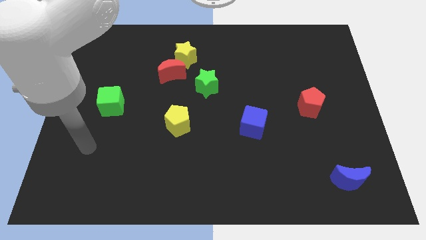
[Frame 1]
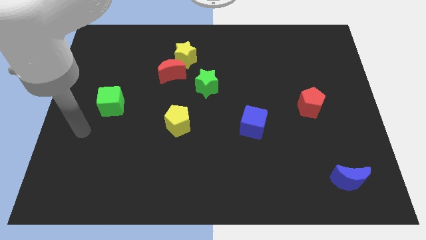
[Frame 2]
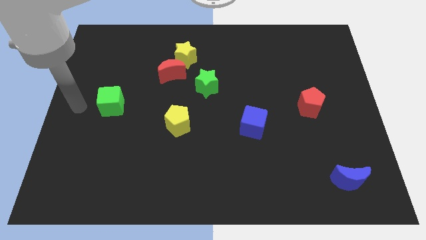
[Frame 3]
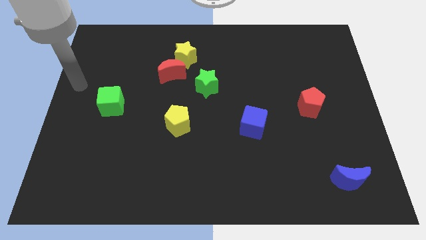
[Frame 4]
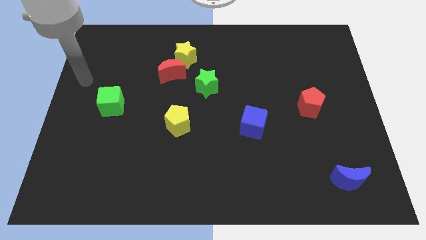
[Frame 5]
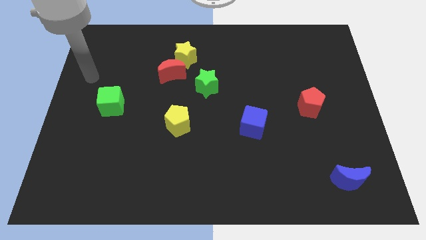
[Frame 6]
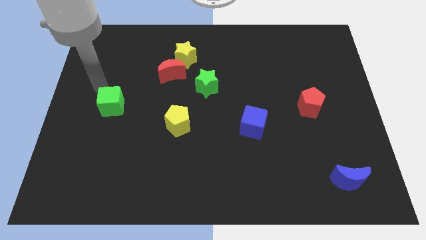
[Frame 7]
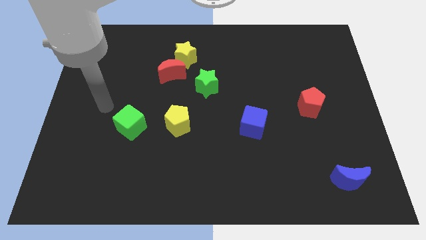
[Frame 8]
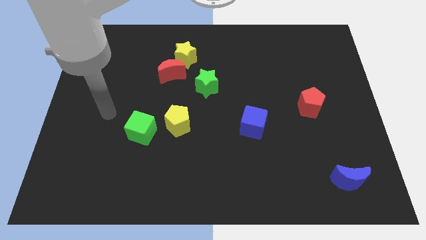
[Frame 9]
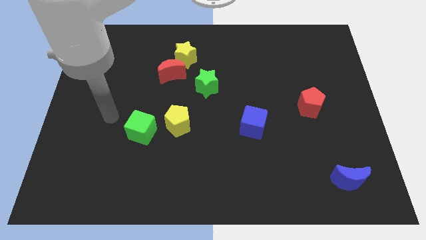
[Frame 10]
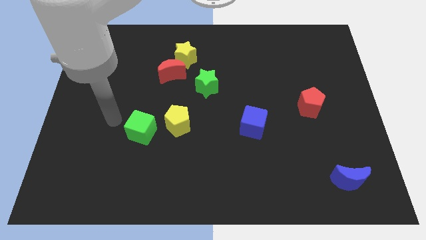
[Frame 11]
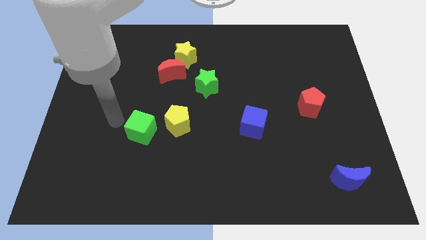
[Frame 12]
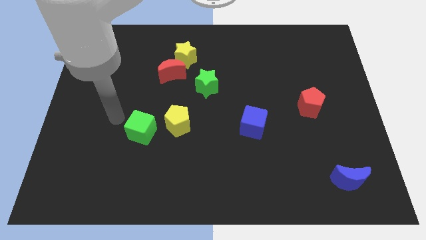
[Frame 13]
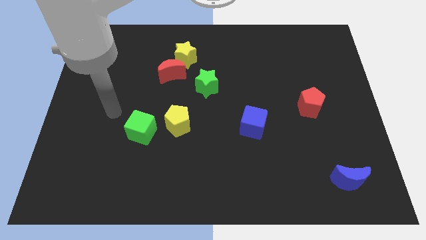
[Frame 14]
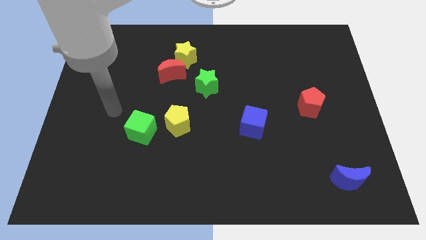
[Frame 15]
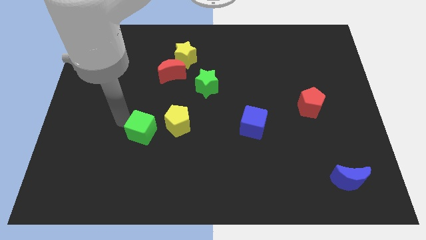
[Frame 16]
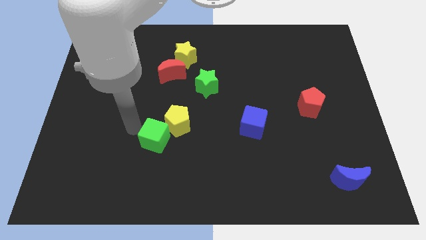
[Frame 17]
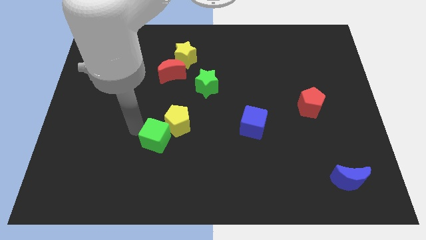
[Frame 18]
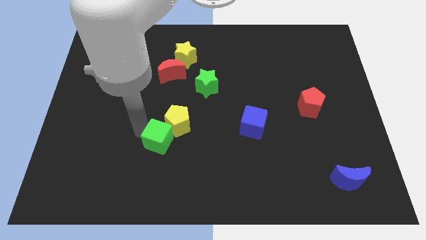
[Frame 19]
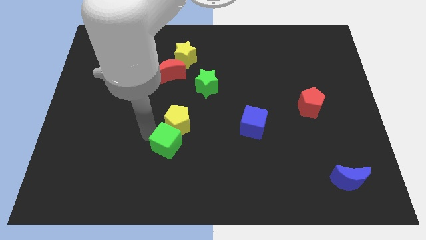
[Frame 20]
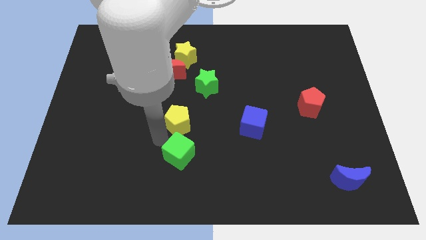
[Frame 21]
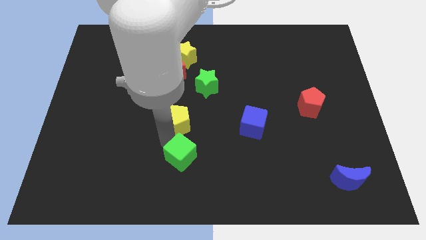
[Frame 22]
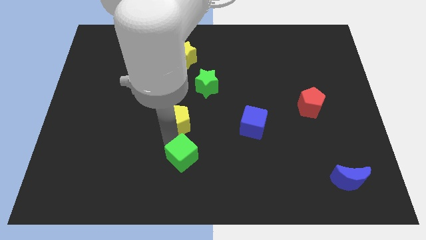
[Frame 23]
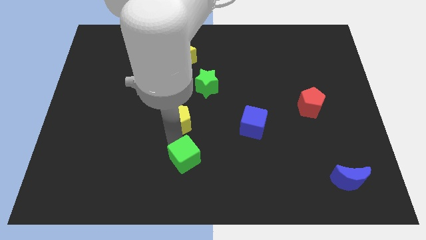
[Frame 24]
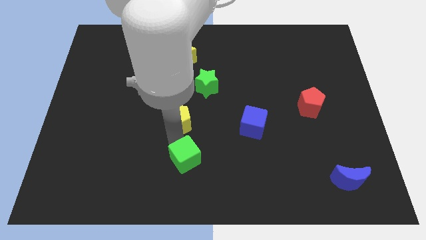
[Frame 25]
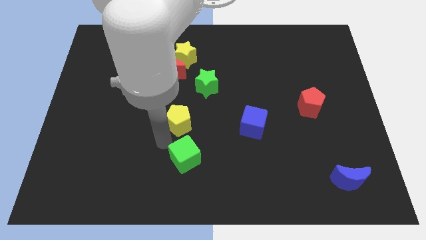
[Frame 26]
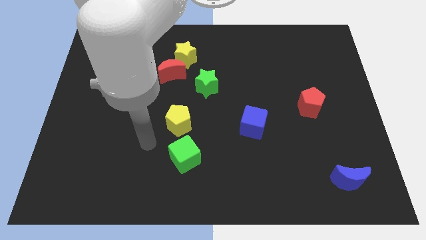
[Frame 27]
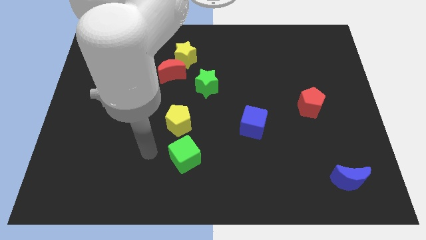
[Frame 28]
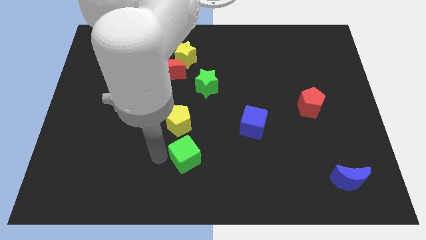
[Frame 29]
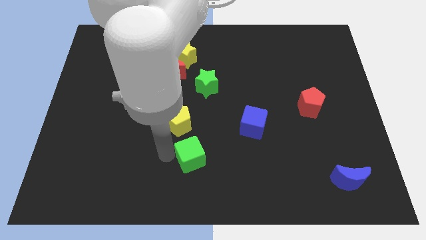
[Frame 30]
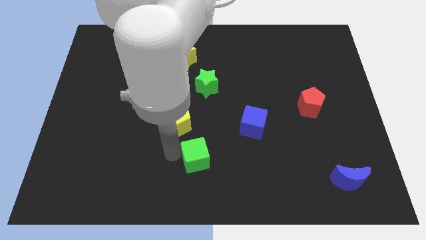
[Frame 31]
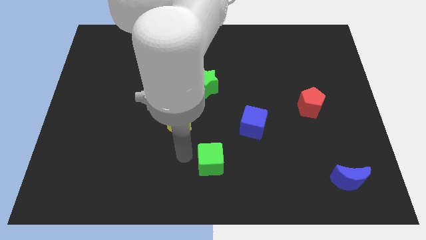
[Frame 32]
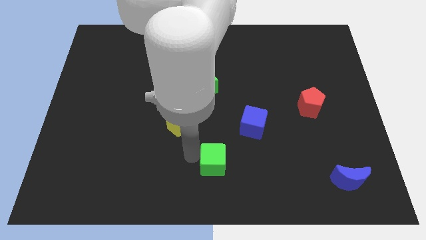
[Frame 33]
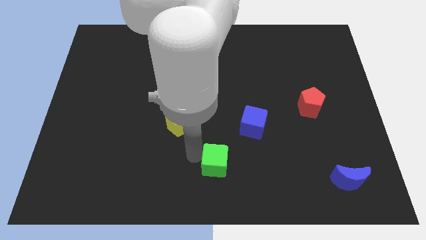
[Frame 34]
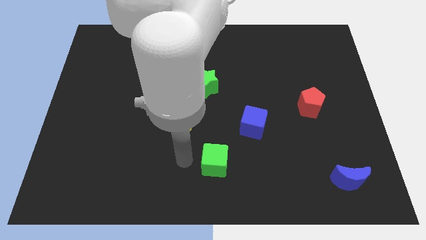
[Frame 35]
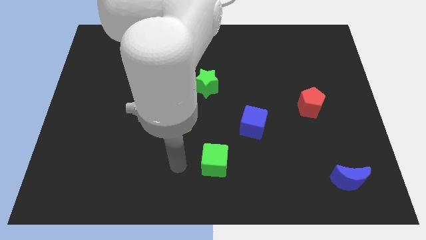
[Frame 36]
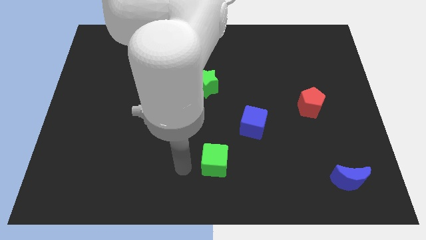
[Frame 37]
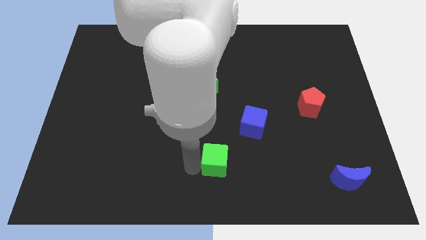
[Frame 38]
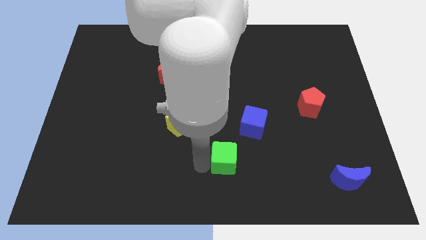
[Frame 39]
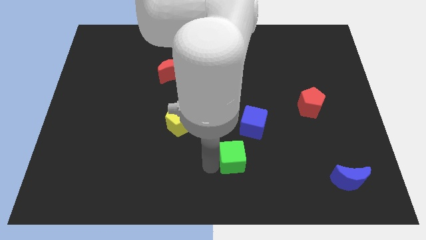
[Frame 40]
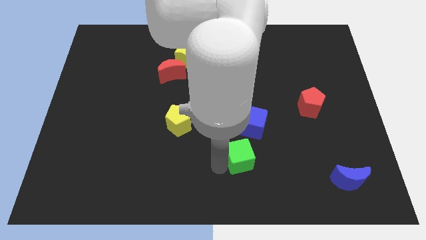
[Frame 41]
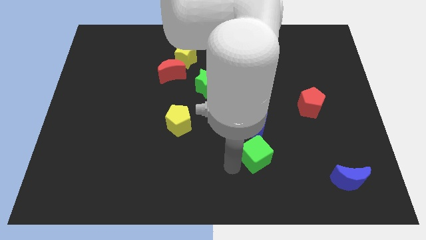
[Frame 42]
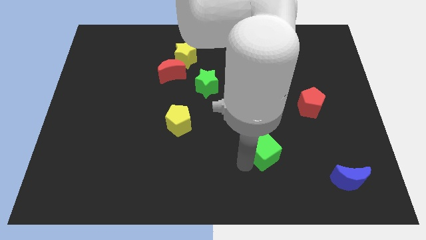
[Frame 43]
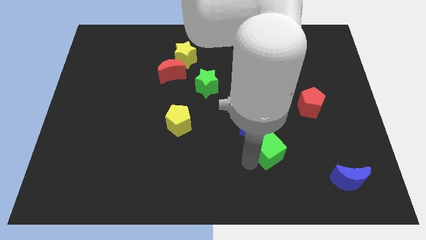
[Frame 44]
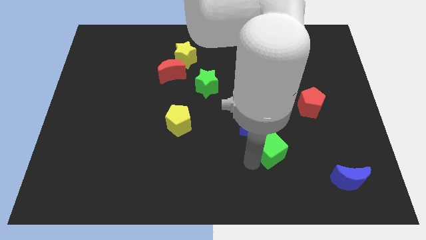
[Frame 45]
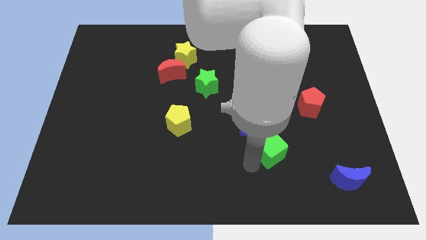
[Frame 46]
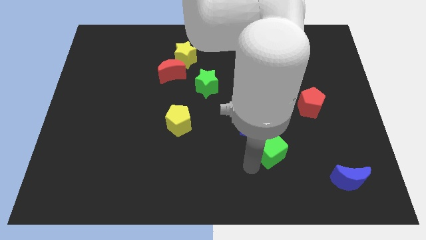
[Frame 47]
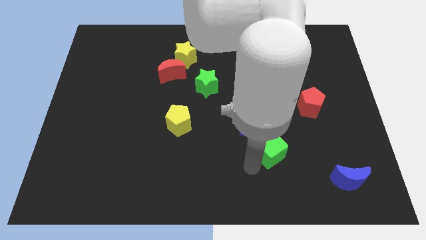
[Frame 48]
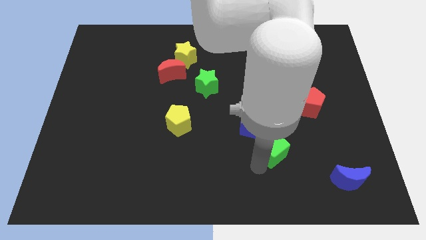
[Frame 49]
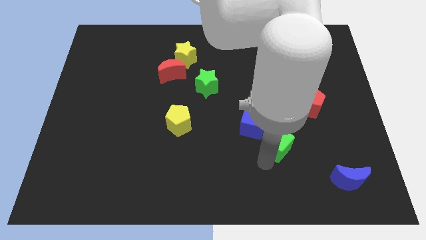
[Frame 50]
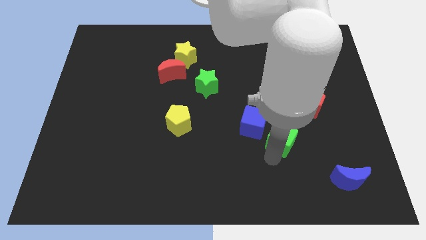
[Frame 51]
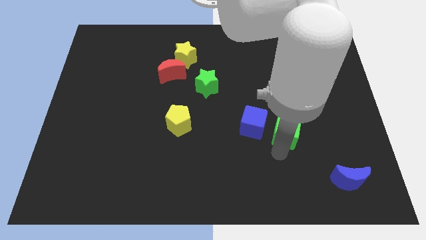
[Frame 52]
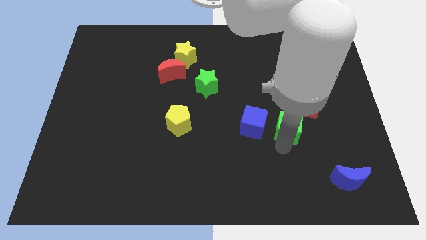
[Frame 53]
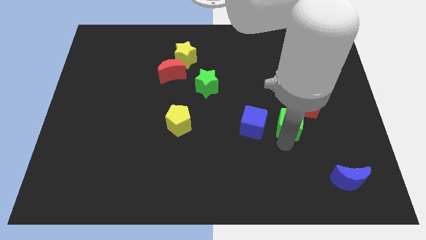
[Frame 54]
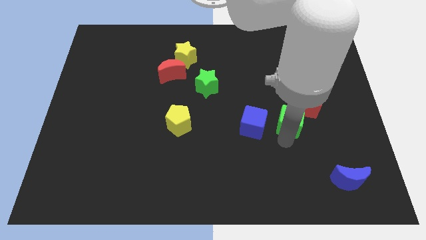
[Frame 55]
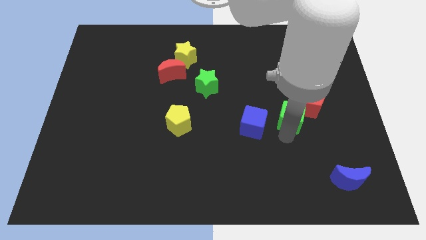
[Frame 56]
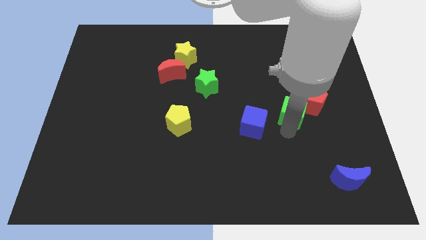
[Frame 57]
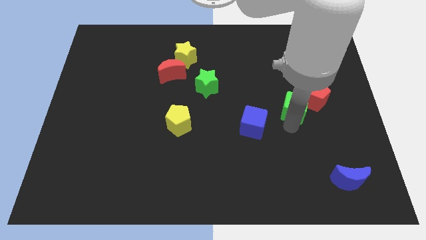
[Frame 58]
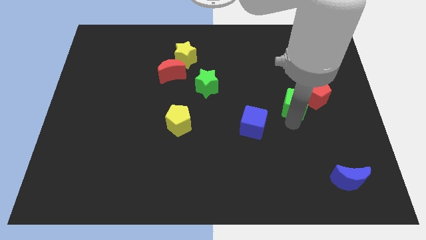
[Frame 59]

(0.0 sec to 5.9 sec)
put the green cube next to the red pentagon

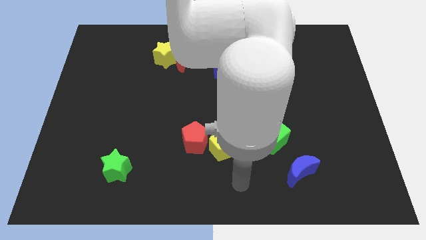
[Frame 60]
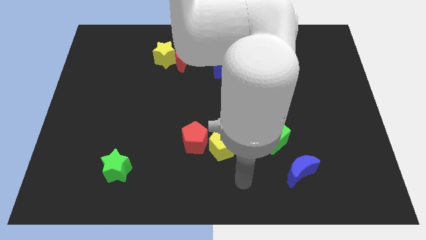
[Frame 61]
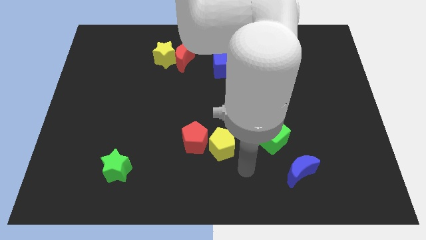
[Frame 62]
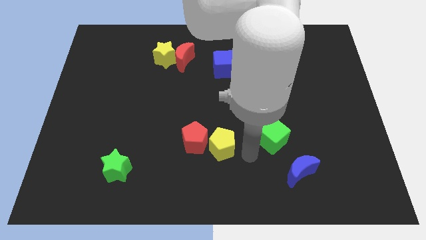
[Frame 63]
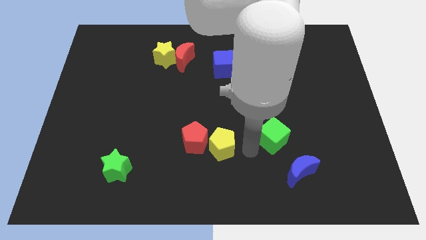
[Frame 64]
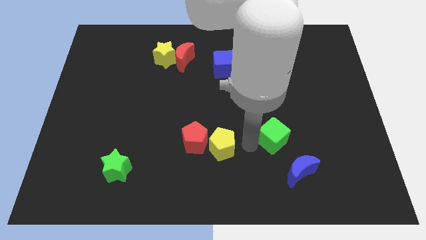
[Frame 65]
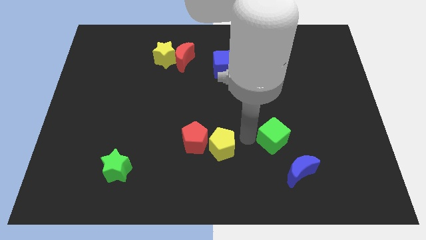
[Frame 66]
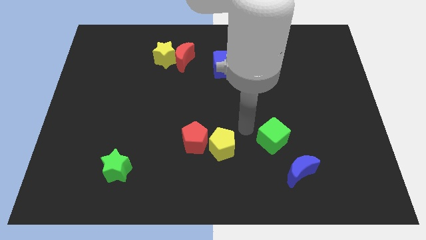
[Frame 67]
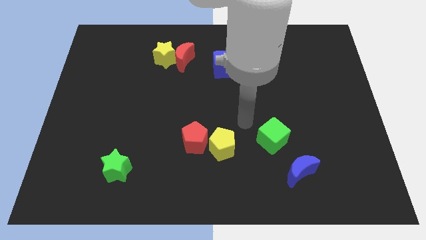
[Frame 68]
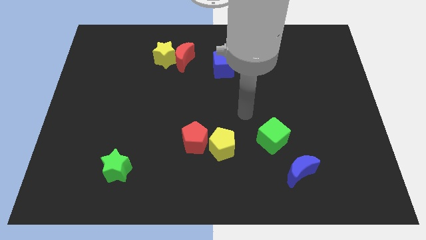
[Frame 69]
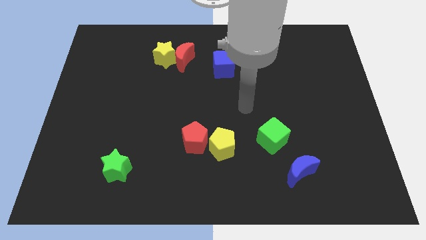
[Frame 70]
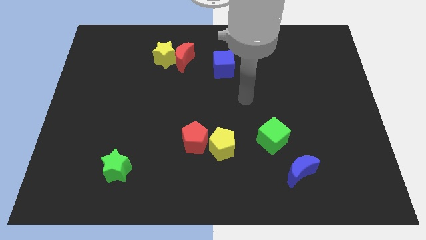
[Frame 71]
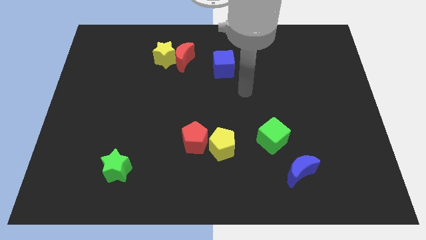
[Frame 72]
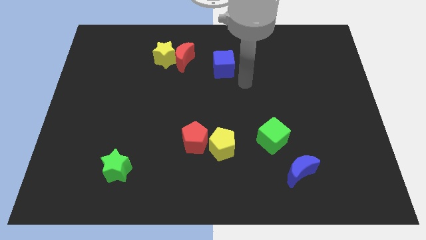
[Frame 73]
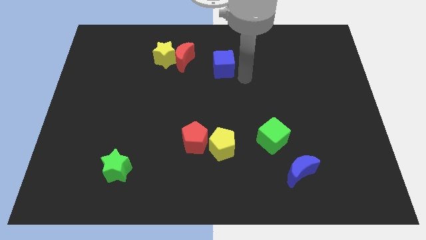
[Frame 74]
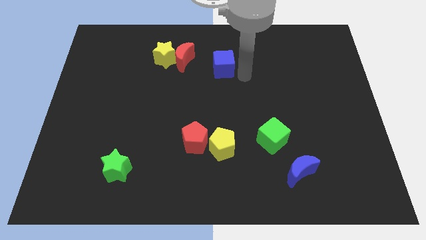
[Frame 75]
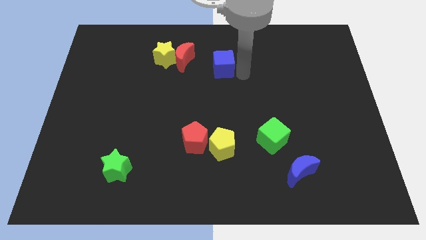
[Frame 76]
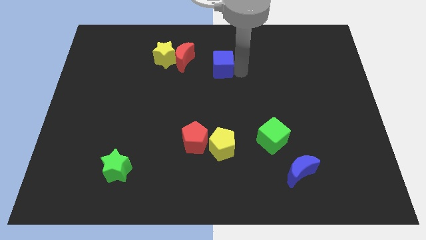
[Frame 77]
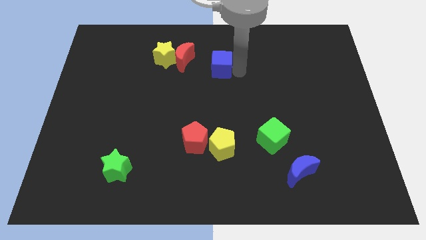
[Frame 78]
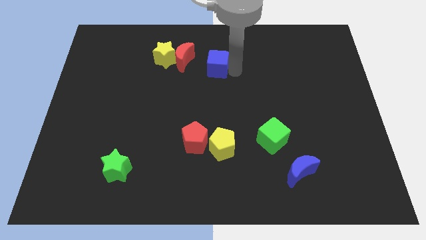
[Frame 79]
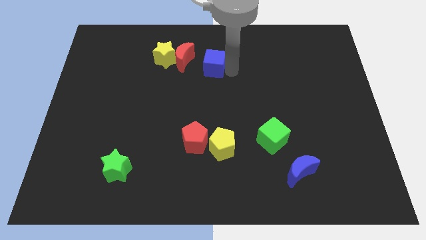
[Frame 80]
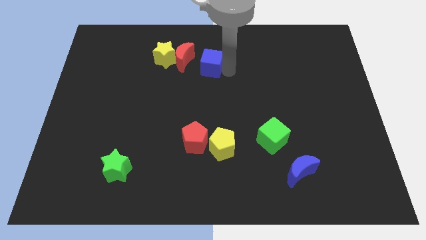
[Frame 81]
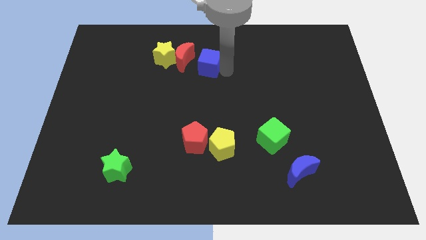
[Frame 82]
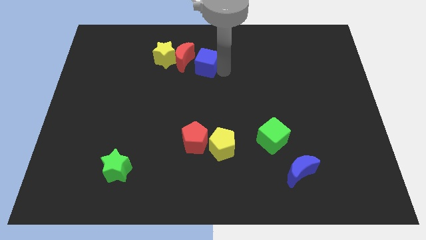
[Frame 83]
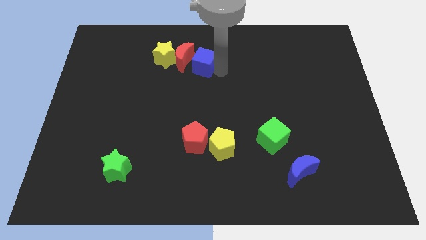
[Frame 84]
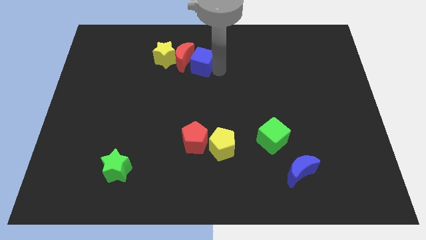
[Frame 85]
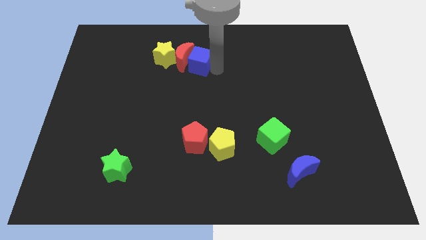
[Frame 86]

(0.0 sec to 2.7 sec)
slide the blue cube next to the red moon
